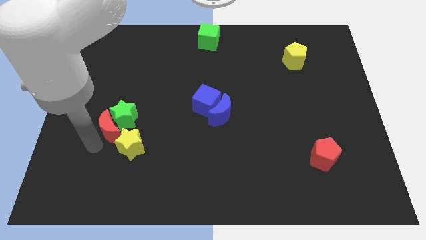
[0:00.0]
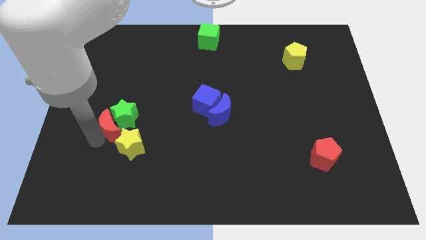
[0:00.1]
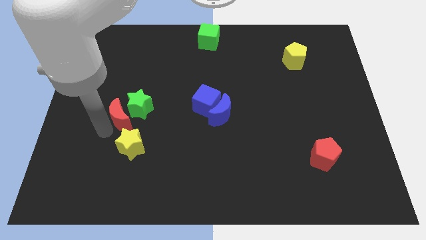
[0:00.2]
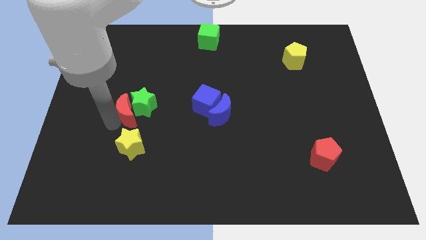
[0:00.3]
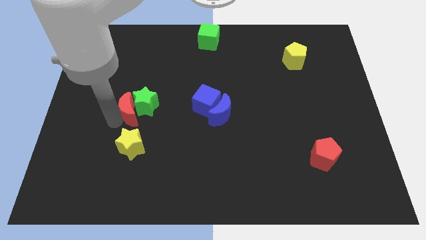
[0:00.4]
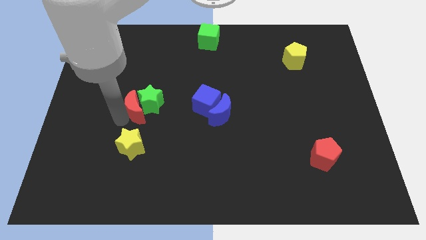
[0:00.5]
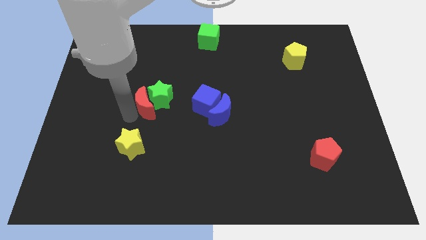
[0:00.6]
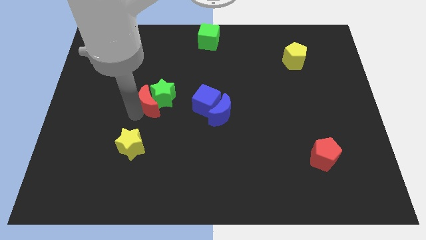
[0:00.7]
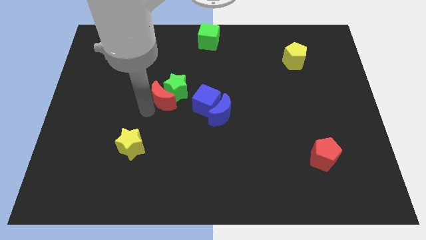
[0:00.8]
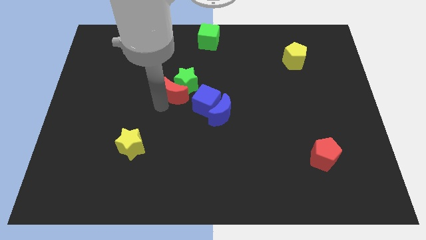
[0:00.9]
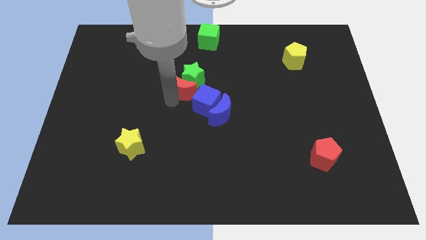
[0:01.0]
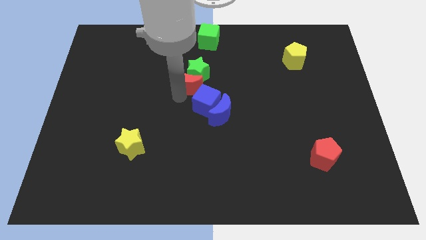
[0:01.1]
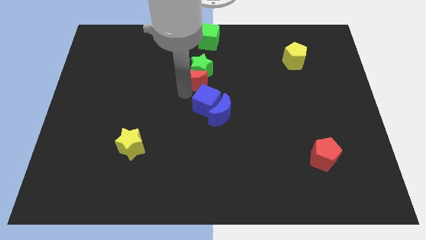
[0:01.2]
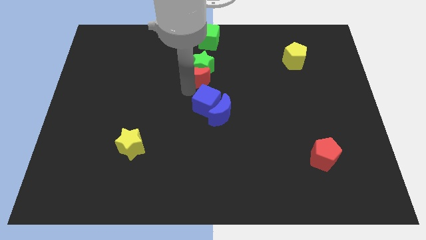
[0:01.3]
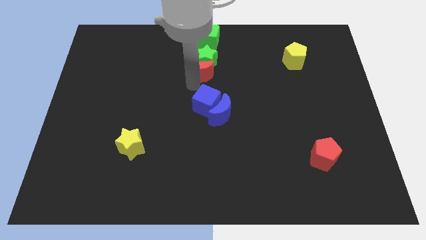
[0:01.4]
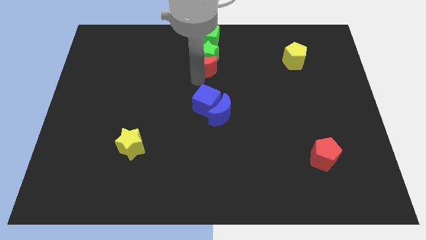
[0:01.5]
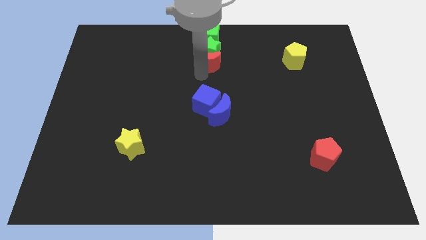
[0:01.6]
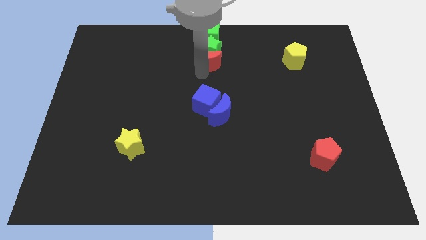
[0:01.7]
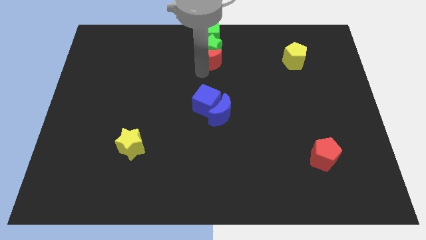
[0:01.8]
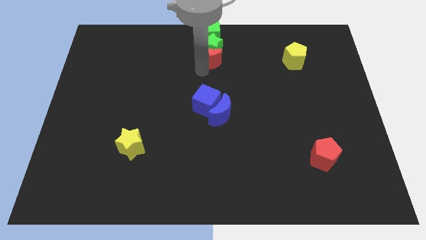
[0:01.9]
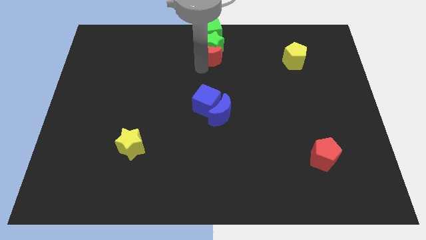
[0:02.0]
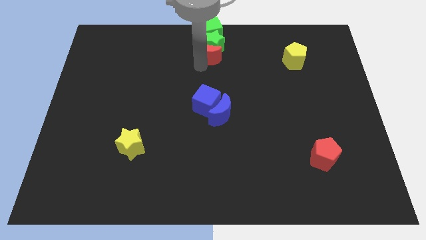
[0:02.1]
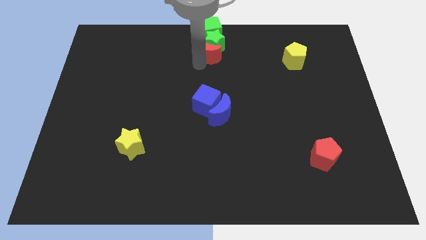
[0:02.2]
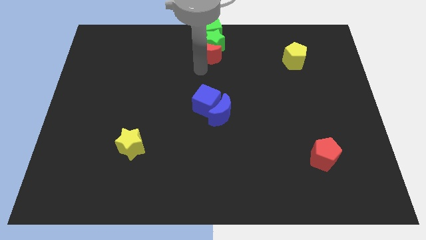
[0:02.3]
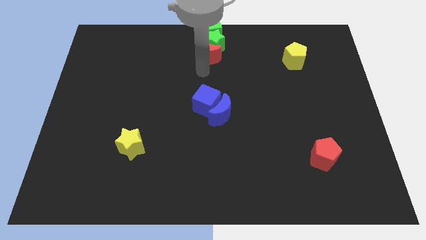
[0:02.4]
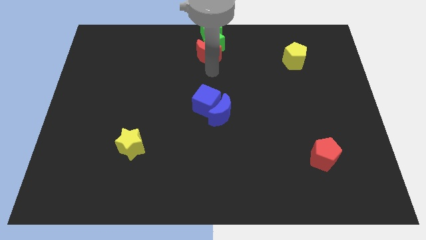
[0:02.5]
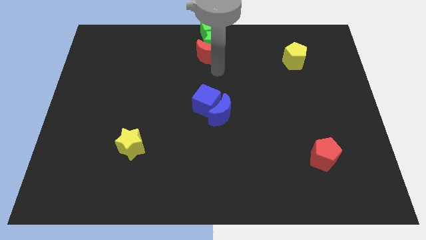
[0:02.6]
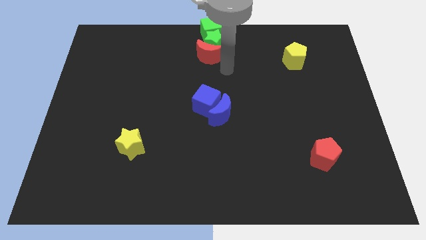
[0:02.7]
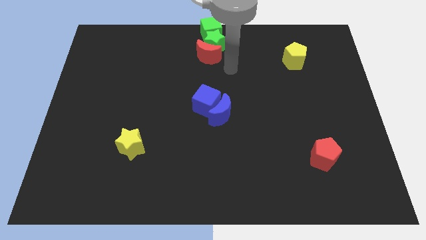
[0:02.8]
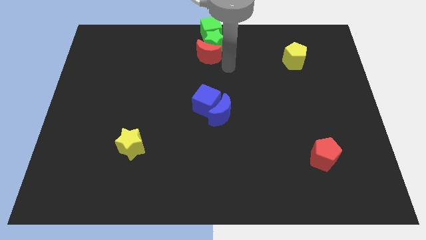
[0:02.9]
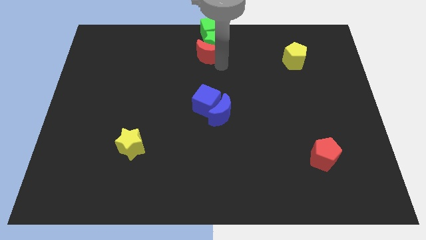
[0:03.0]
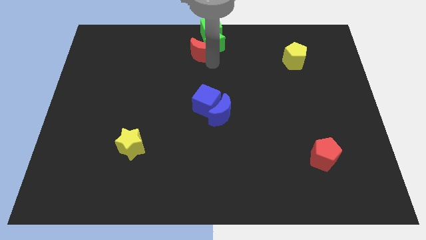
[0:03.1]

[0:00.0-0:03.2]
push the red moon along with the green star into the green cube

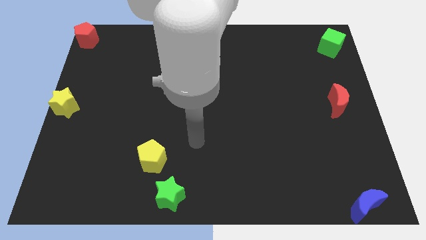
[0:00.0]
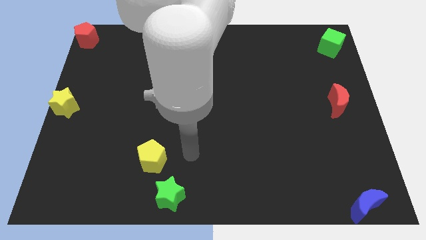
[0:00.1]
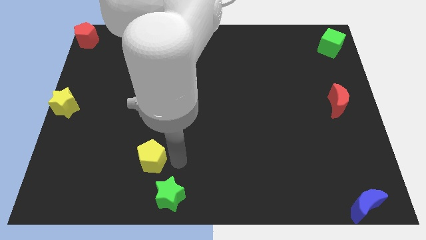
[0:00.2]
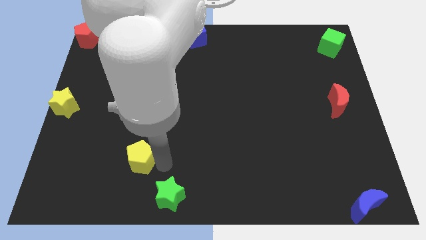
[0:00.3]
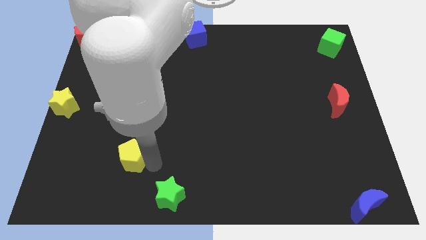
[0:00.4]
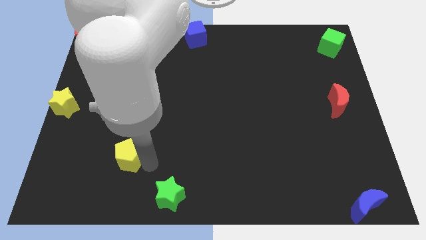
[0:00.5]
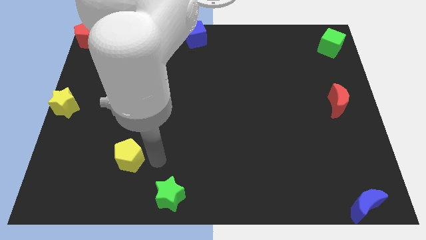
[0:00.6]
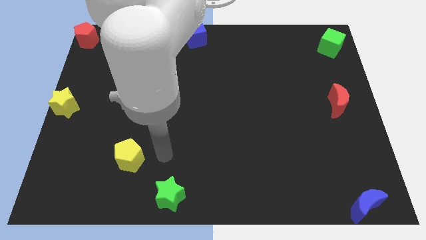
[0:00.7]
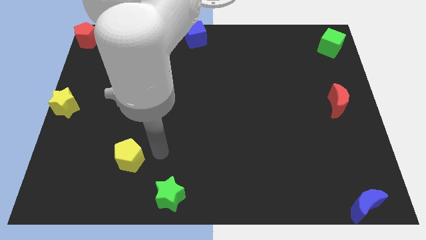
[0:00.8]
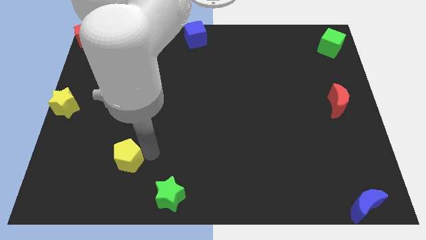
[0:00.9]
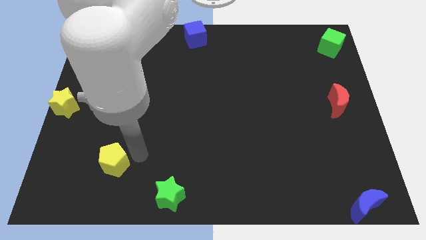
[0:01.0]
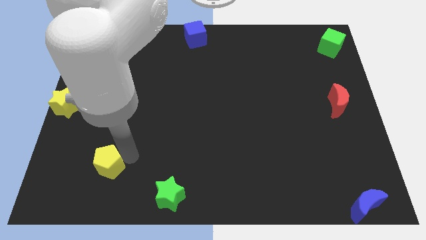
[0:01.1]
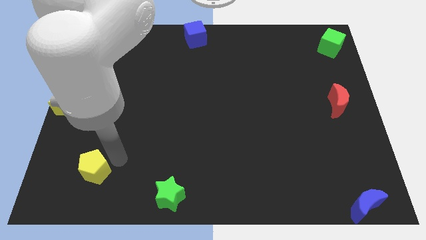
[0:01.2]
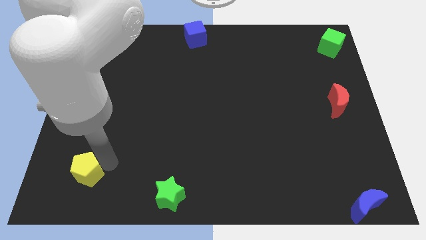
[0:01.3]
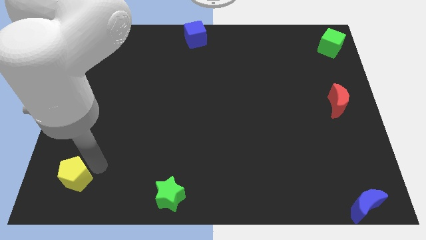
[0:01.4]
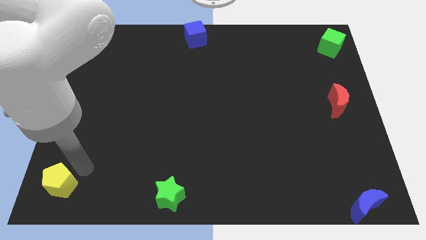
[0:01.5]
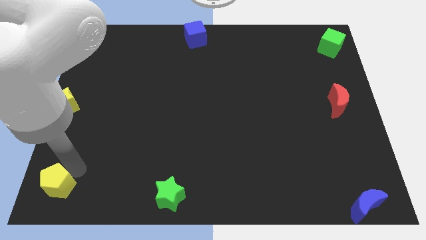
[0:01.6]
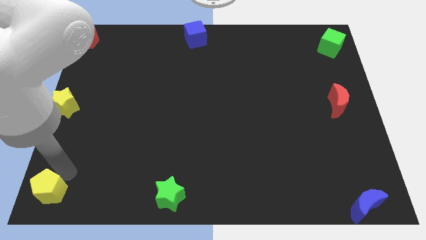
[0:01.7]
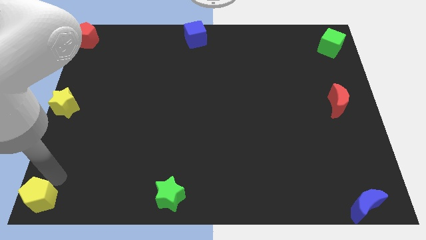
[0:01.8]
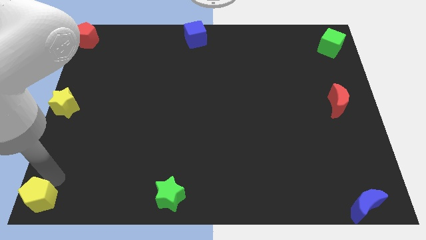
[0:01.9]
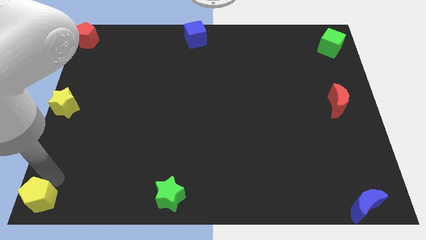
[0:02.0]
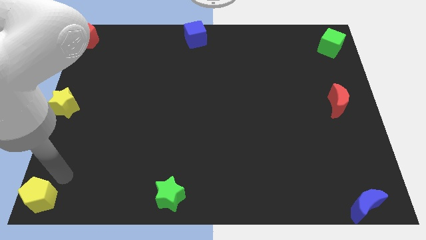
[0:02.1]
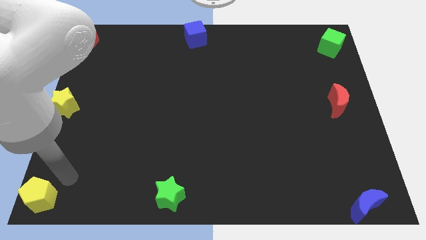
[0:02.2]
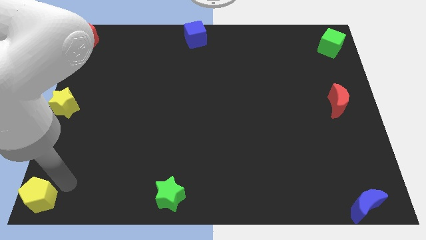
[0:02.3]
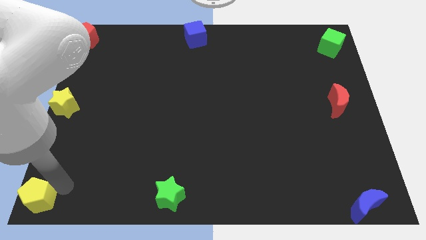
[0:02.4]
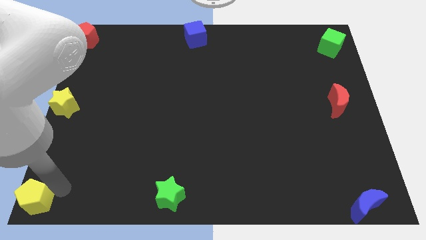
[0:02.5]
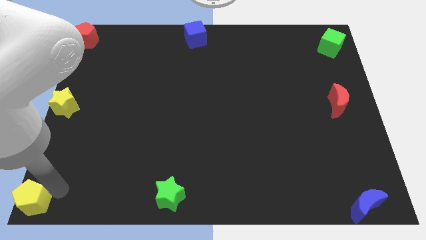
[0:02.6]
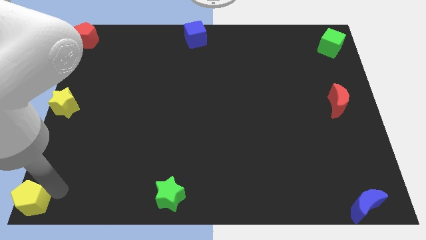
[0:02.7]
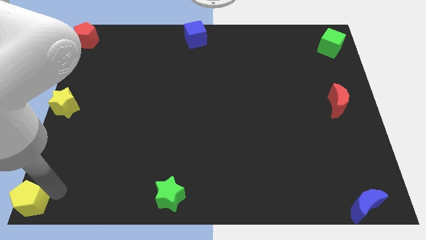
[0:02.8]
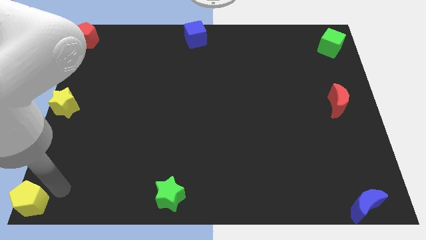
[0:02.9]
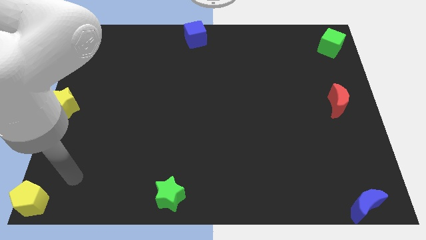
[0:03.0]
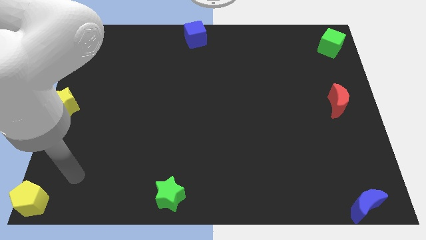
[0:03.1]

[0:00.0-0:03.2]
push the yellow pentagon to the bottom left corner of the board

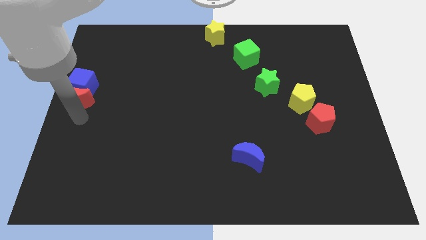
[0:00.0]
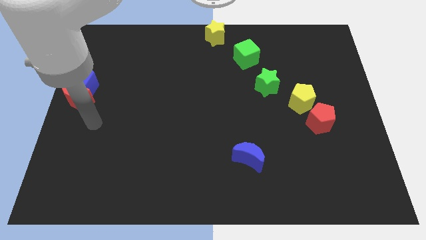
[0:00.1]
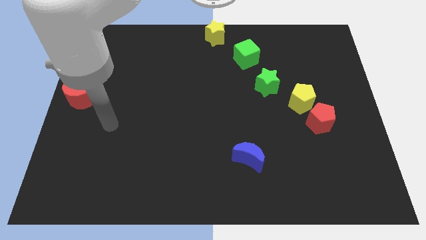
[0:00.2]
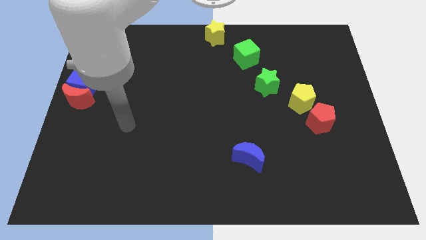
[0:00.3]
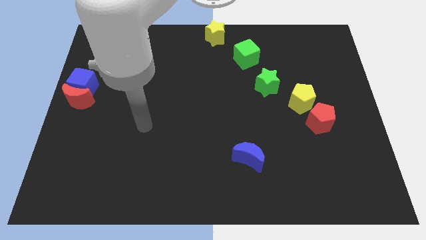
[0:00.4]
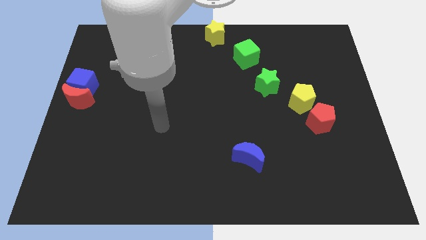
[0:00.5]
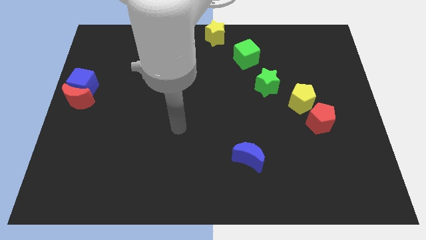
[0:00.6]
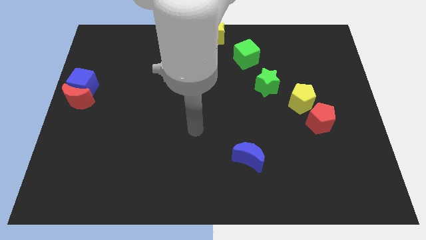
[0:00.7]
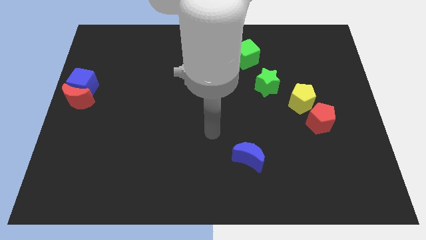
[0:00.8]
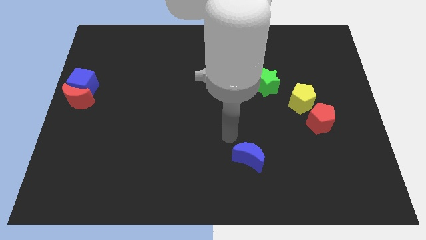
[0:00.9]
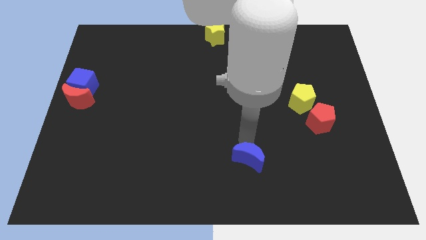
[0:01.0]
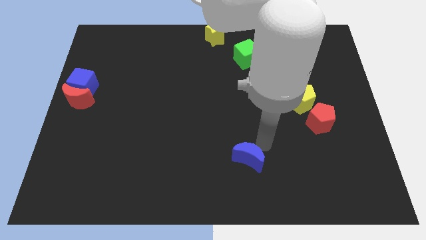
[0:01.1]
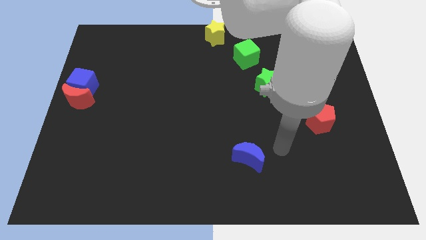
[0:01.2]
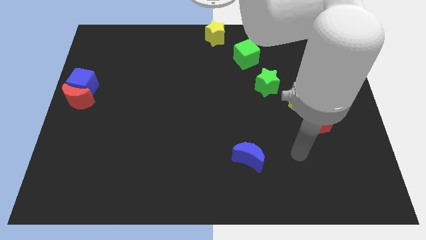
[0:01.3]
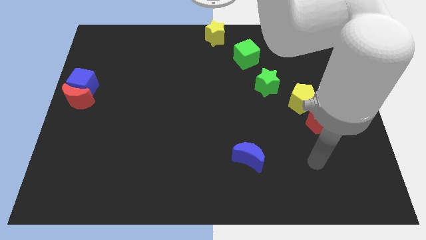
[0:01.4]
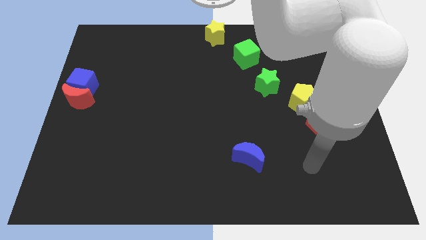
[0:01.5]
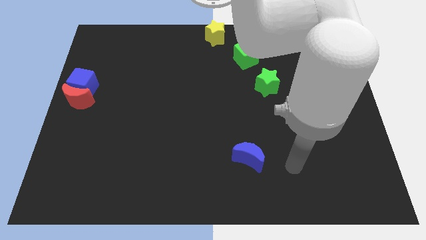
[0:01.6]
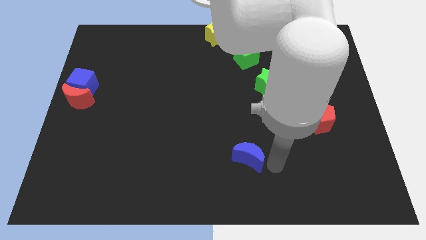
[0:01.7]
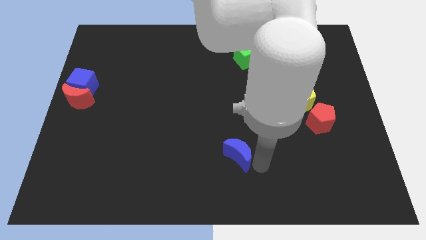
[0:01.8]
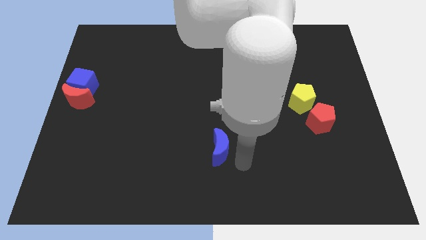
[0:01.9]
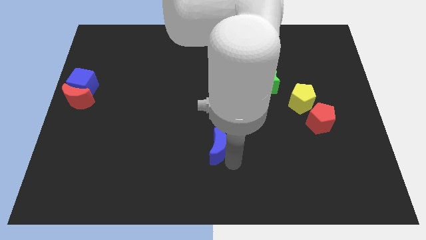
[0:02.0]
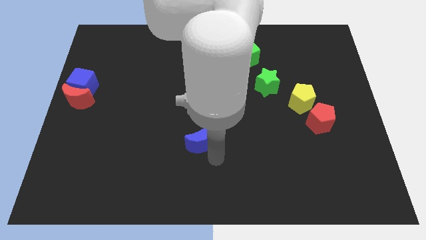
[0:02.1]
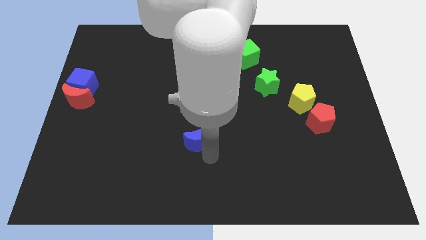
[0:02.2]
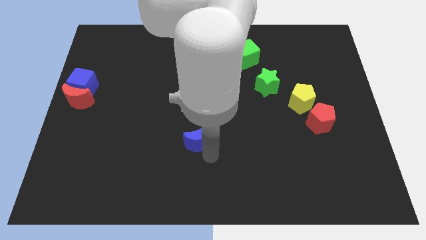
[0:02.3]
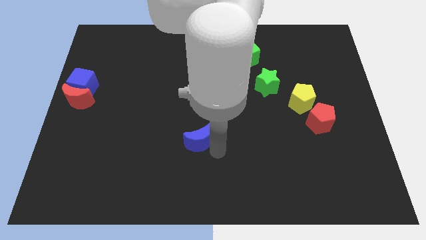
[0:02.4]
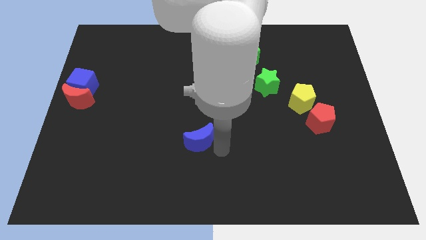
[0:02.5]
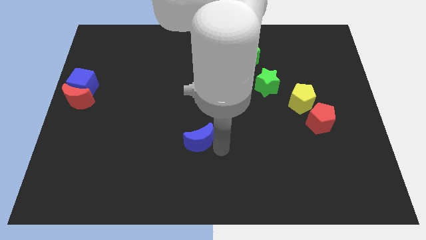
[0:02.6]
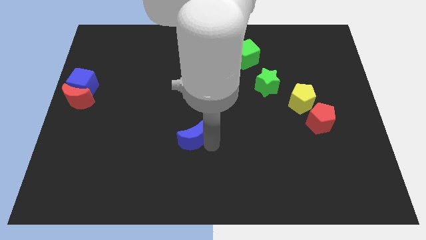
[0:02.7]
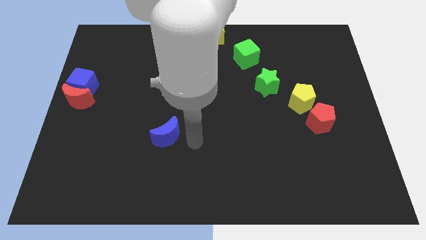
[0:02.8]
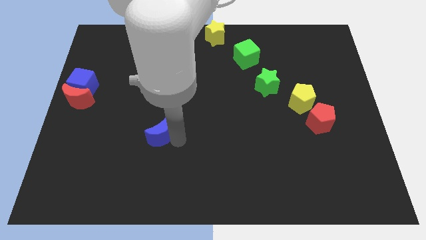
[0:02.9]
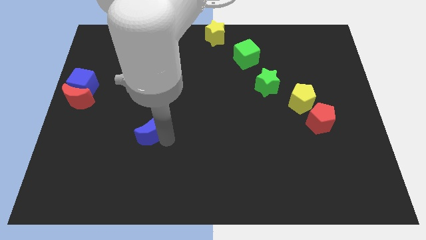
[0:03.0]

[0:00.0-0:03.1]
drag the blue moon towards the left diagonally upwards
